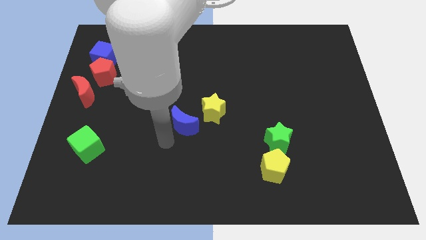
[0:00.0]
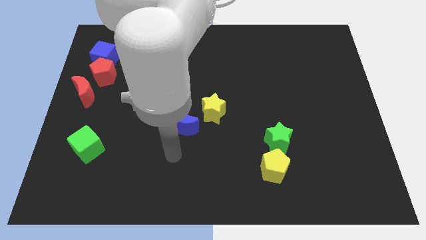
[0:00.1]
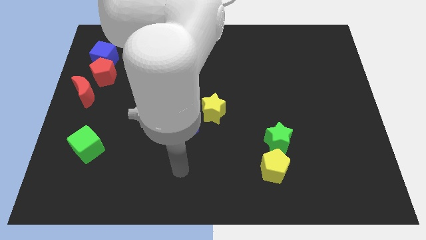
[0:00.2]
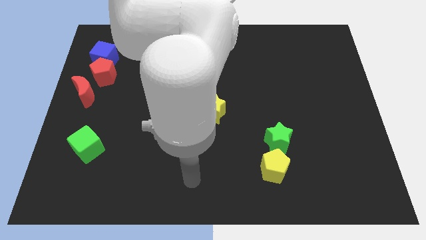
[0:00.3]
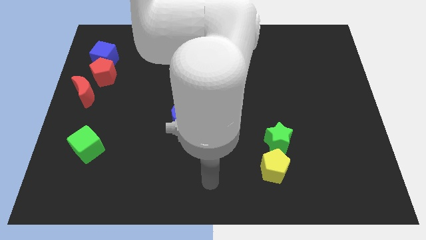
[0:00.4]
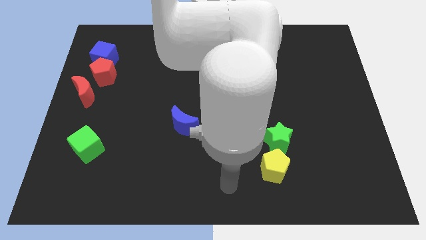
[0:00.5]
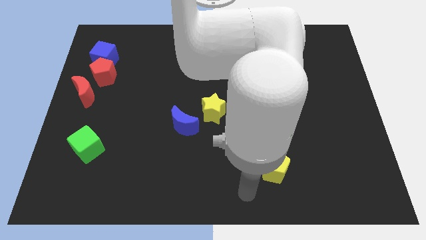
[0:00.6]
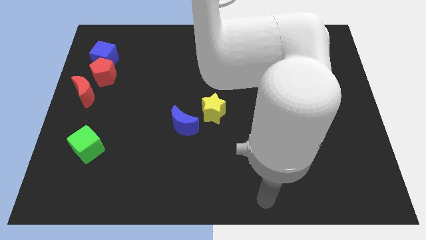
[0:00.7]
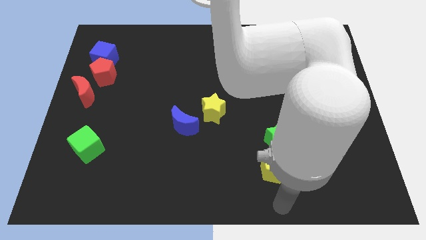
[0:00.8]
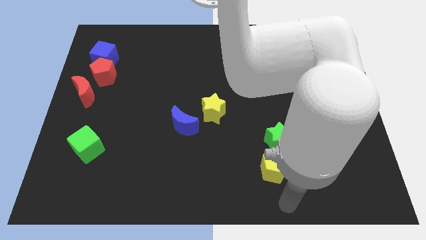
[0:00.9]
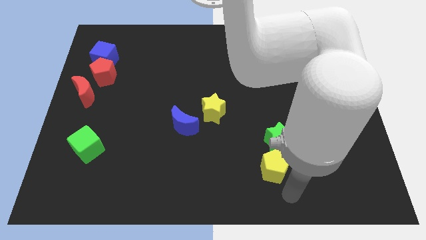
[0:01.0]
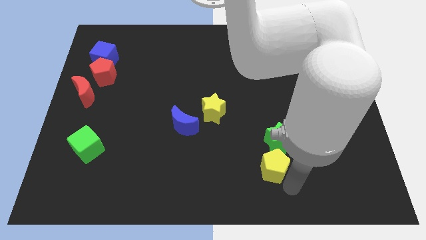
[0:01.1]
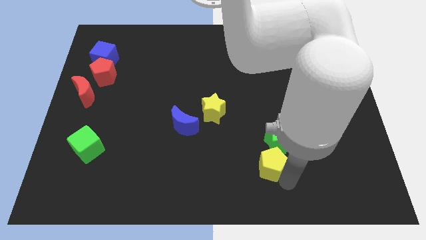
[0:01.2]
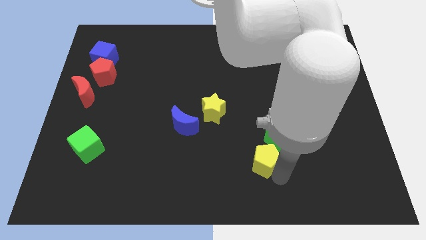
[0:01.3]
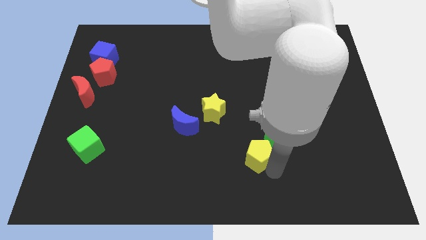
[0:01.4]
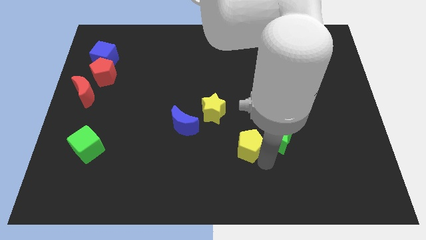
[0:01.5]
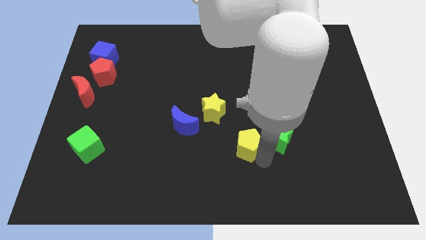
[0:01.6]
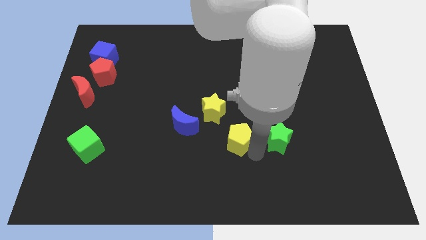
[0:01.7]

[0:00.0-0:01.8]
separate the yellow pentagon fromhe green star

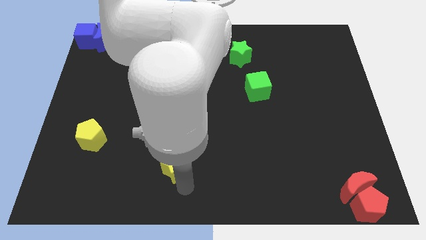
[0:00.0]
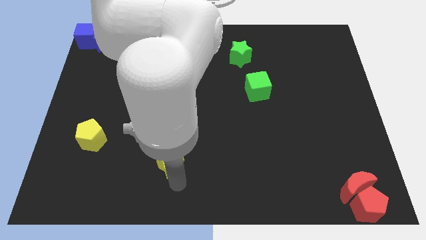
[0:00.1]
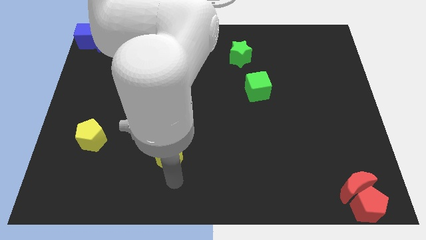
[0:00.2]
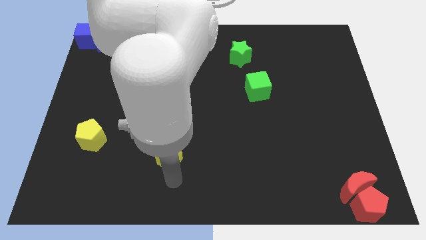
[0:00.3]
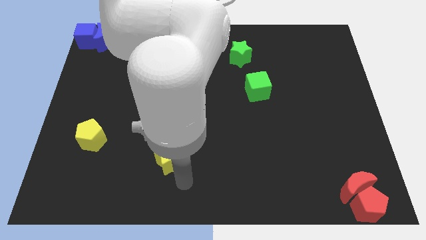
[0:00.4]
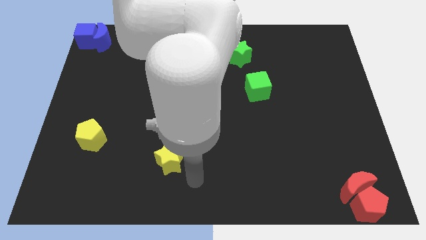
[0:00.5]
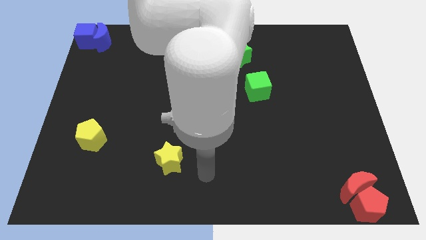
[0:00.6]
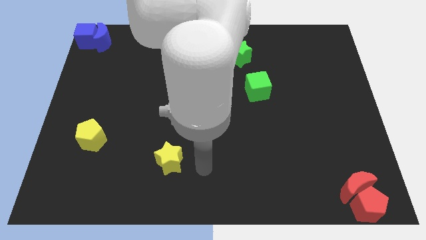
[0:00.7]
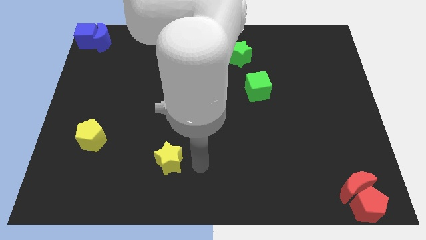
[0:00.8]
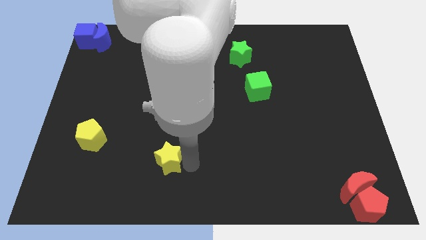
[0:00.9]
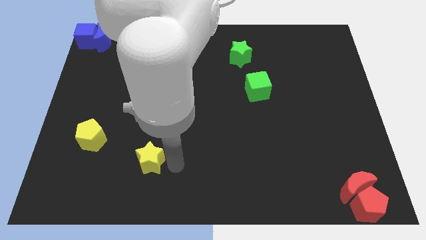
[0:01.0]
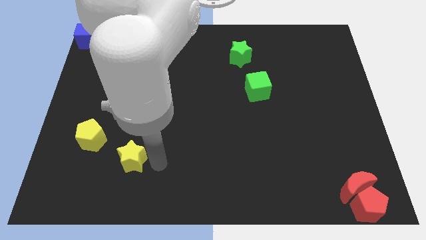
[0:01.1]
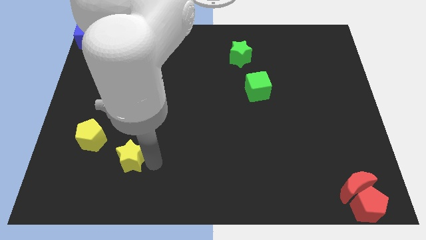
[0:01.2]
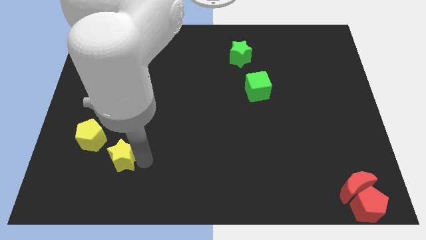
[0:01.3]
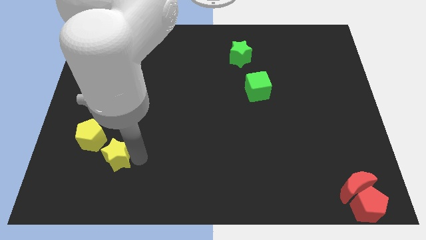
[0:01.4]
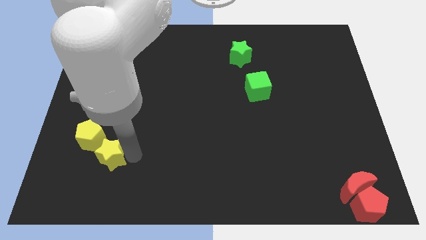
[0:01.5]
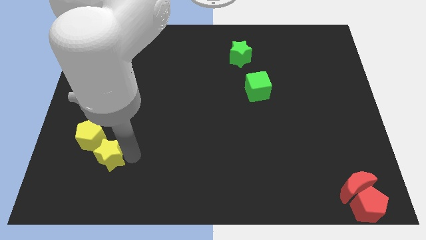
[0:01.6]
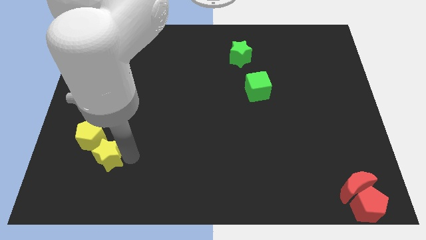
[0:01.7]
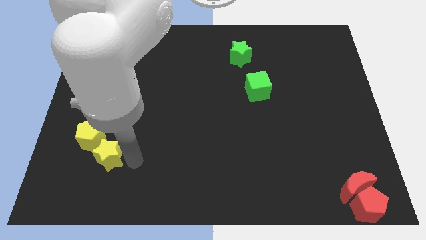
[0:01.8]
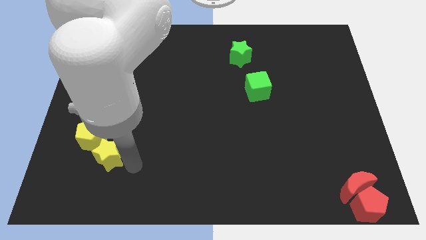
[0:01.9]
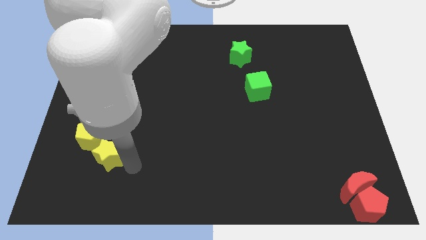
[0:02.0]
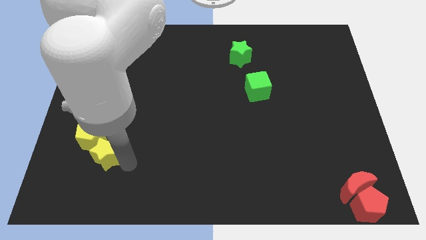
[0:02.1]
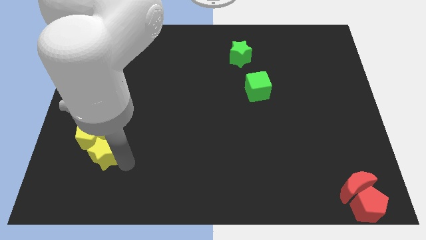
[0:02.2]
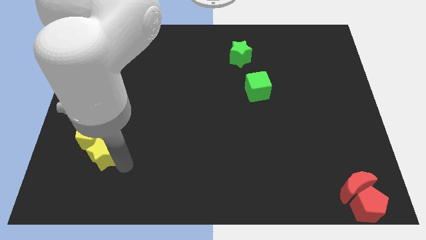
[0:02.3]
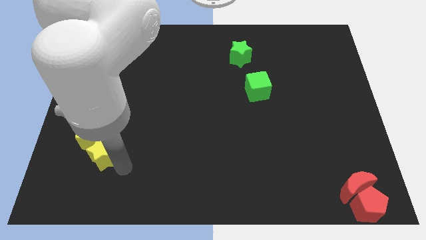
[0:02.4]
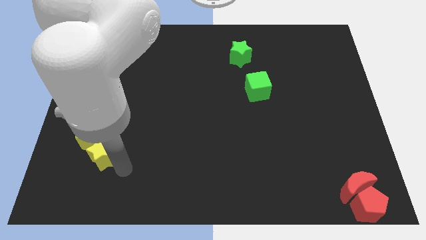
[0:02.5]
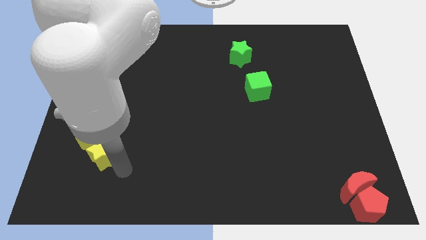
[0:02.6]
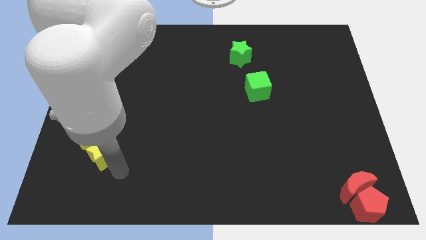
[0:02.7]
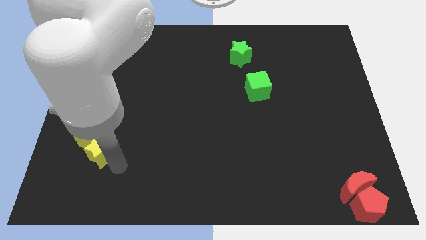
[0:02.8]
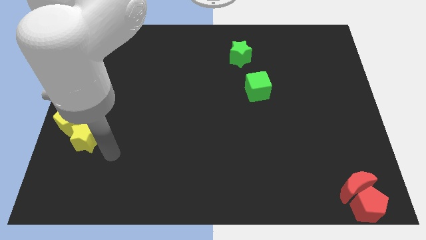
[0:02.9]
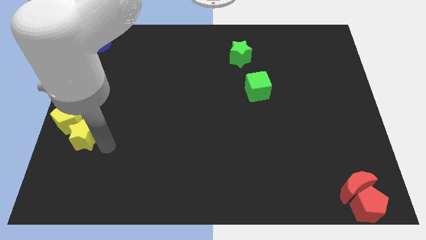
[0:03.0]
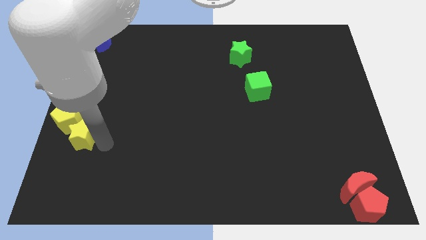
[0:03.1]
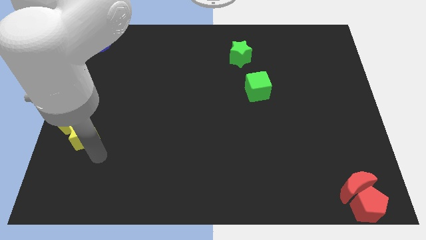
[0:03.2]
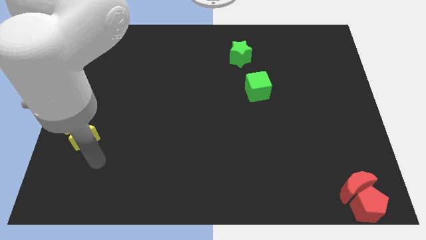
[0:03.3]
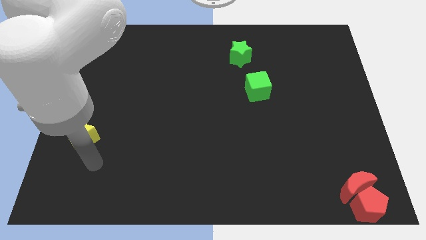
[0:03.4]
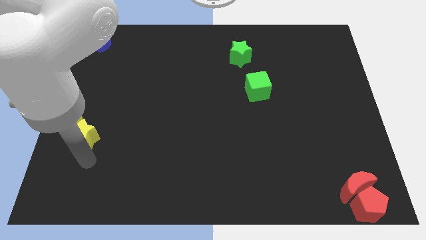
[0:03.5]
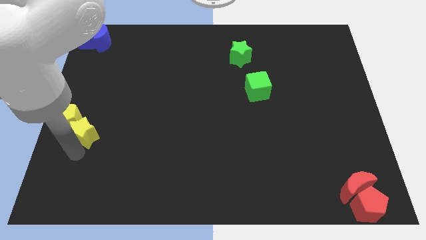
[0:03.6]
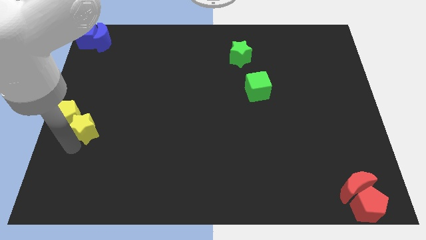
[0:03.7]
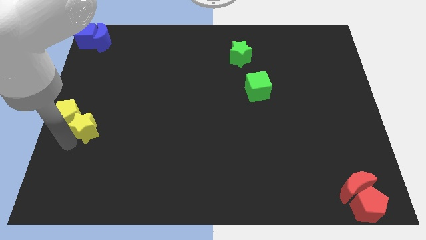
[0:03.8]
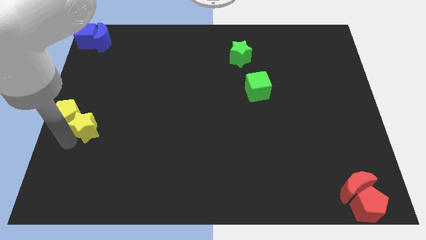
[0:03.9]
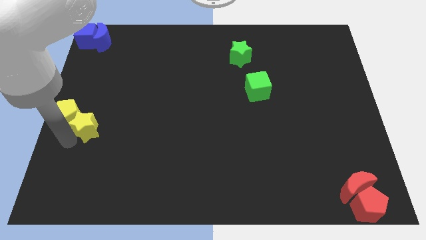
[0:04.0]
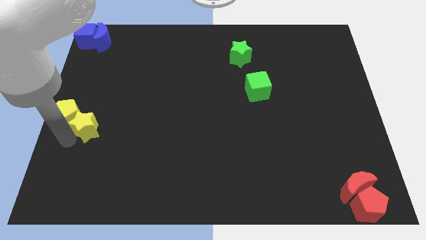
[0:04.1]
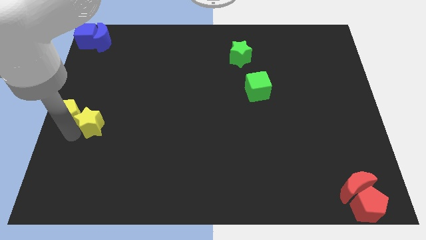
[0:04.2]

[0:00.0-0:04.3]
push the yellow star into the yellow pentagon

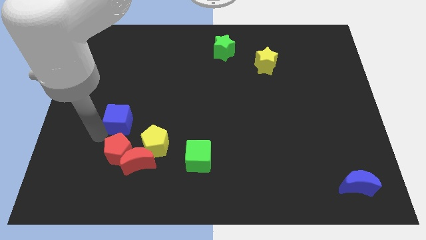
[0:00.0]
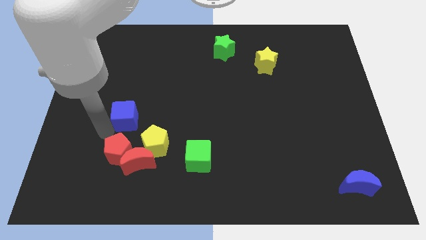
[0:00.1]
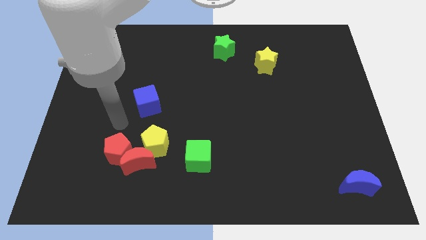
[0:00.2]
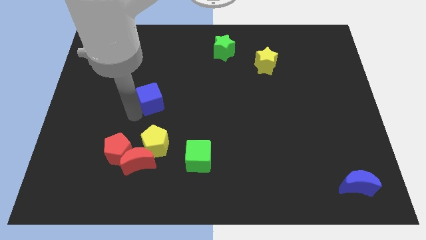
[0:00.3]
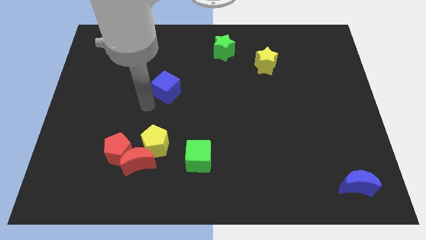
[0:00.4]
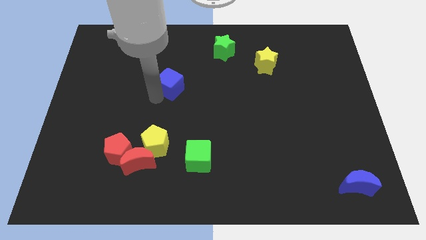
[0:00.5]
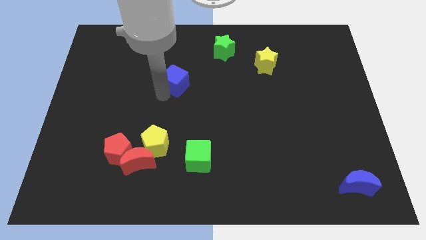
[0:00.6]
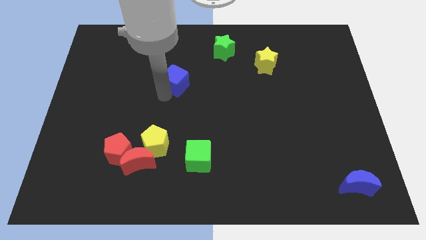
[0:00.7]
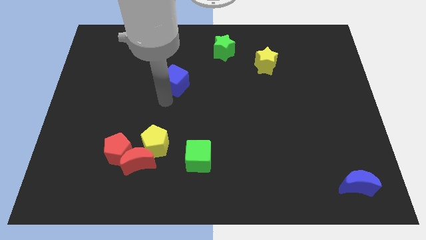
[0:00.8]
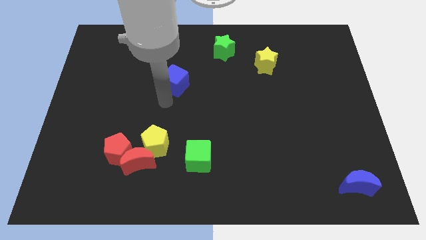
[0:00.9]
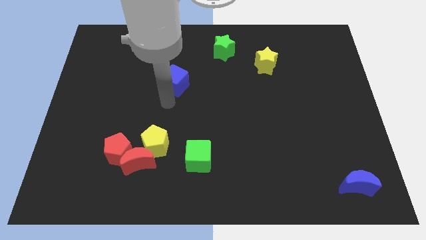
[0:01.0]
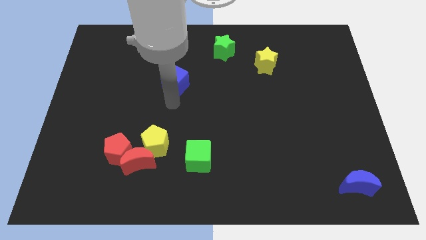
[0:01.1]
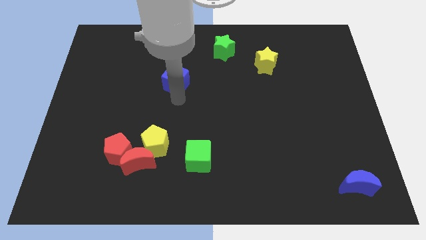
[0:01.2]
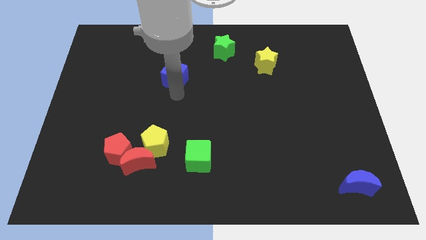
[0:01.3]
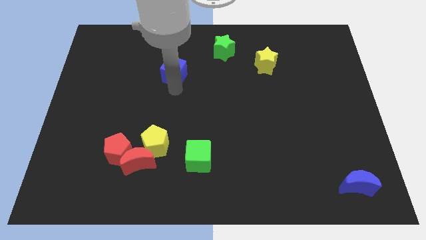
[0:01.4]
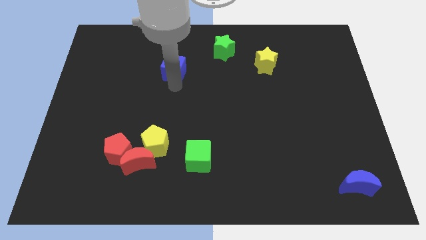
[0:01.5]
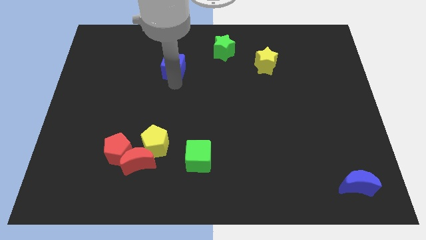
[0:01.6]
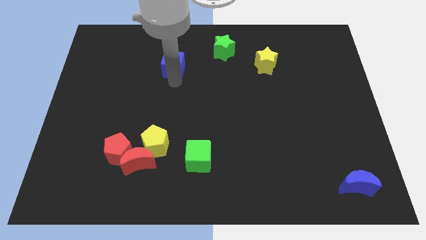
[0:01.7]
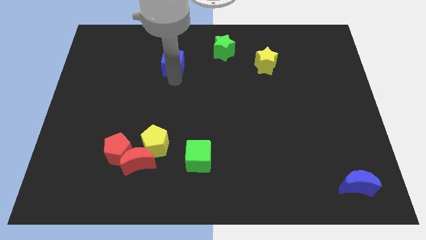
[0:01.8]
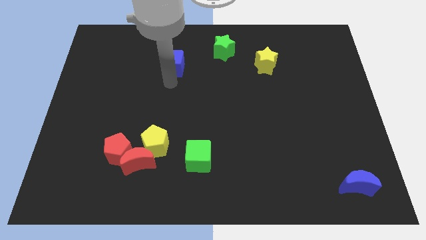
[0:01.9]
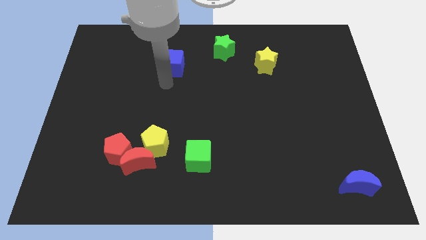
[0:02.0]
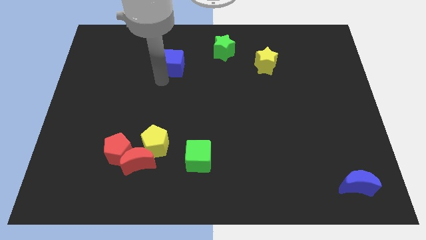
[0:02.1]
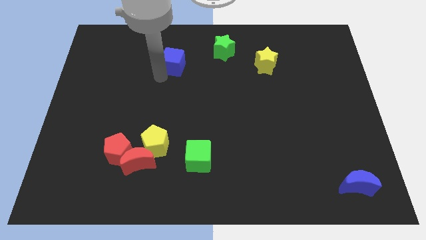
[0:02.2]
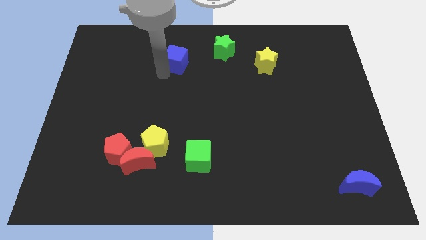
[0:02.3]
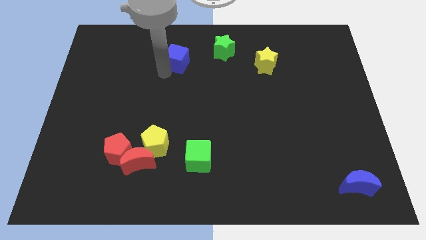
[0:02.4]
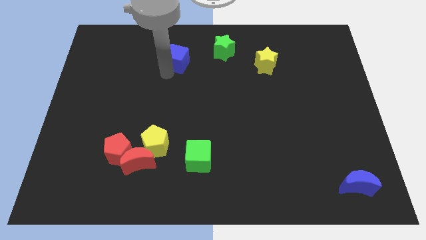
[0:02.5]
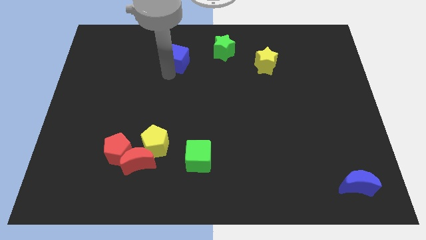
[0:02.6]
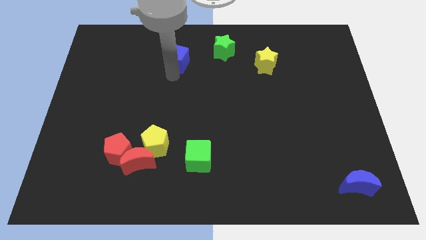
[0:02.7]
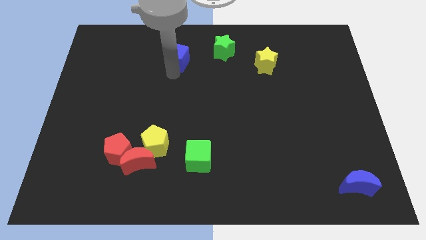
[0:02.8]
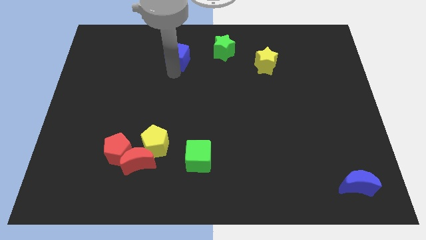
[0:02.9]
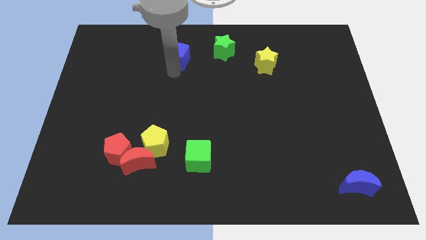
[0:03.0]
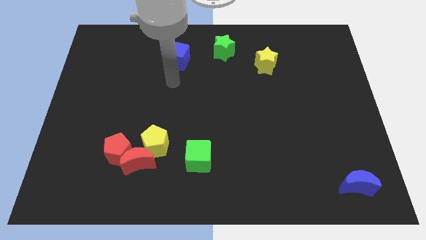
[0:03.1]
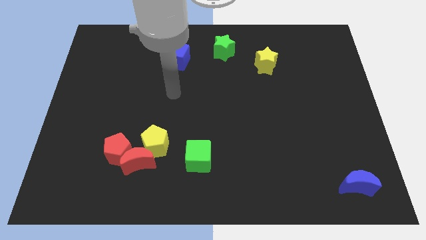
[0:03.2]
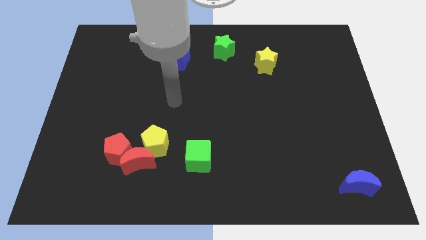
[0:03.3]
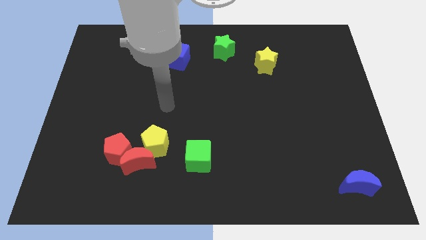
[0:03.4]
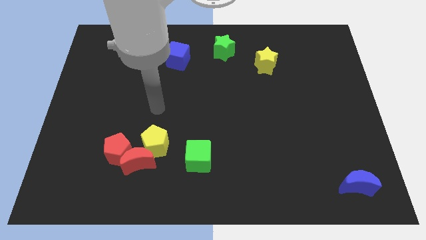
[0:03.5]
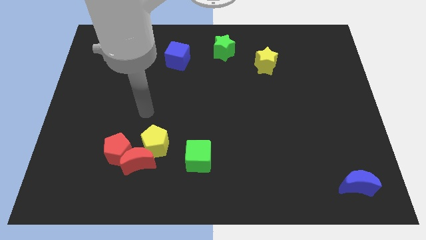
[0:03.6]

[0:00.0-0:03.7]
move the blue cube to the left of the green star
